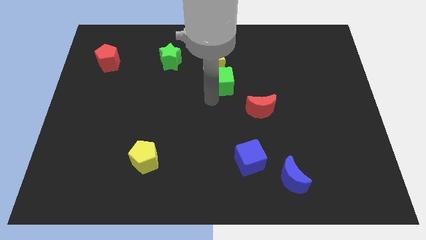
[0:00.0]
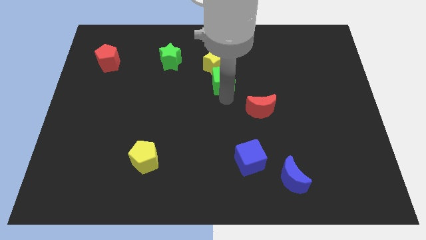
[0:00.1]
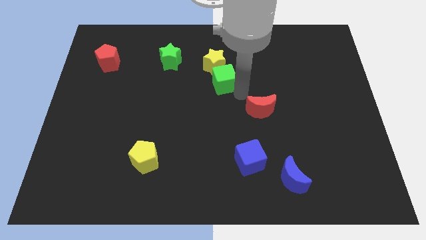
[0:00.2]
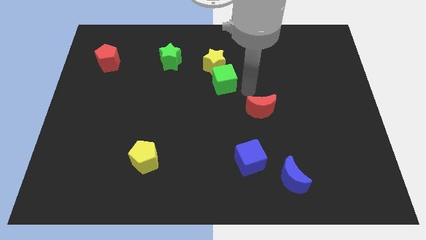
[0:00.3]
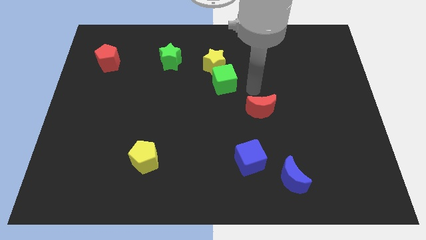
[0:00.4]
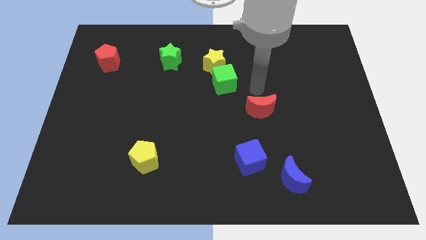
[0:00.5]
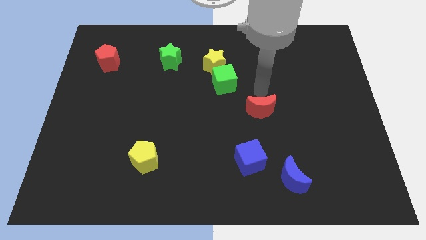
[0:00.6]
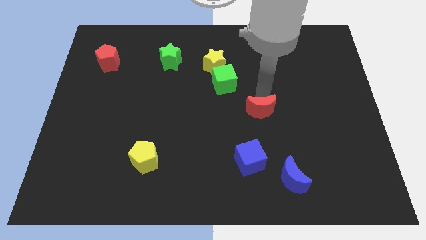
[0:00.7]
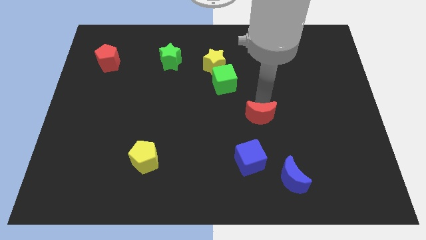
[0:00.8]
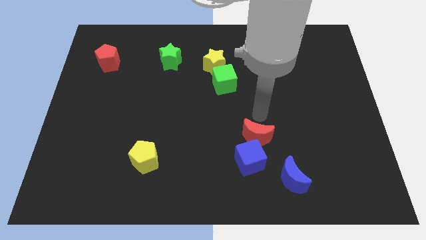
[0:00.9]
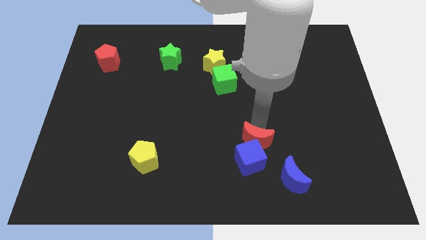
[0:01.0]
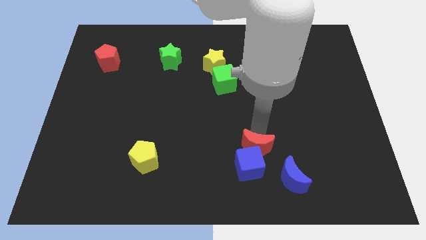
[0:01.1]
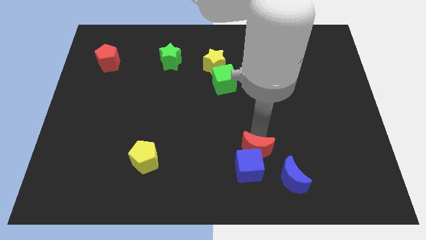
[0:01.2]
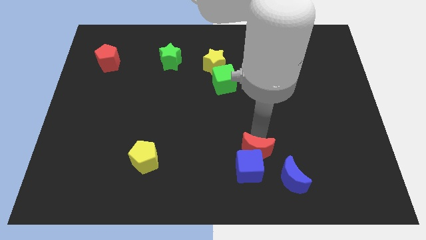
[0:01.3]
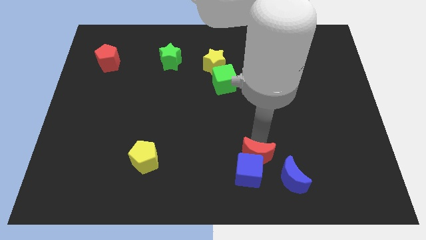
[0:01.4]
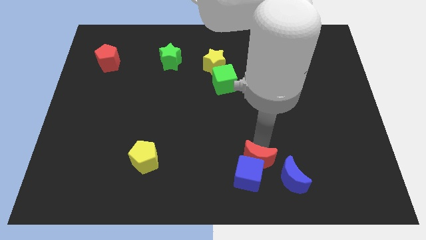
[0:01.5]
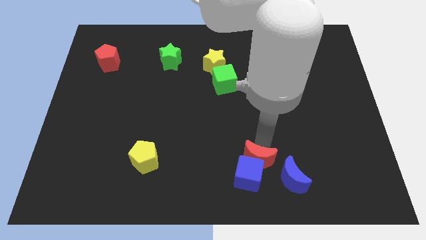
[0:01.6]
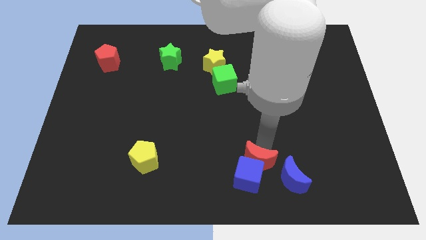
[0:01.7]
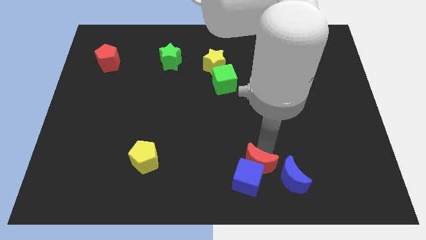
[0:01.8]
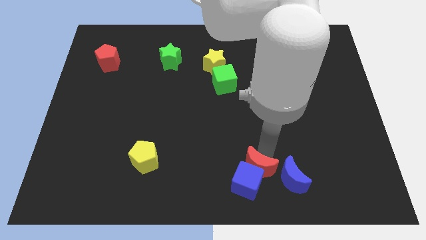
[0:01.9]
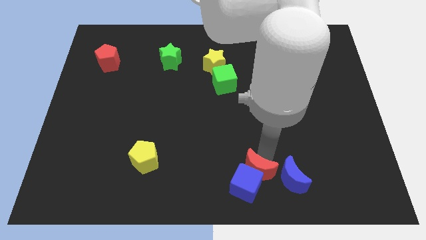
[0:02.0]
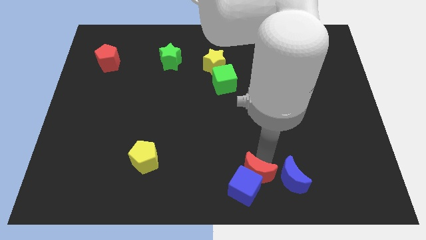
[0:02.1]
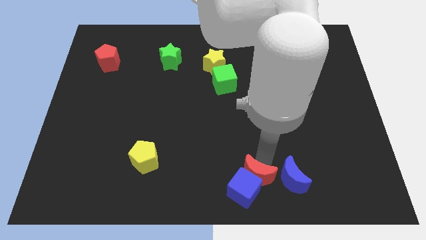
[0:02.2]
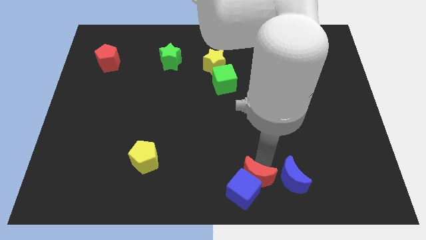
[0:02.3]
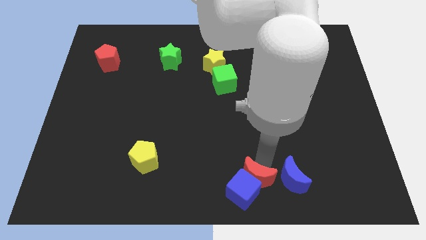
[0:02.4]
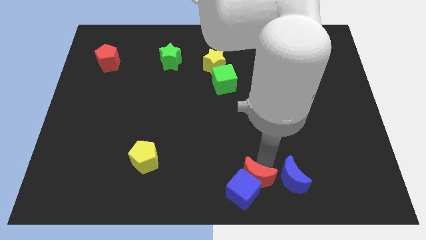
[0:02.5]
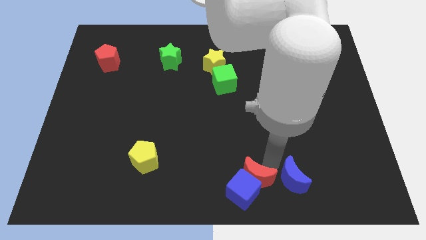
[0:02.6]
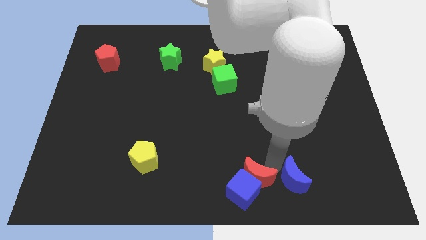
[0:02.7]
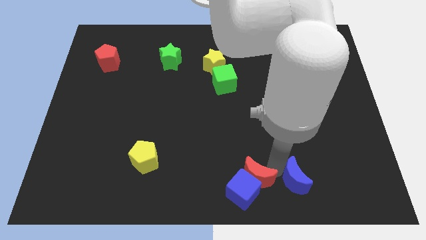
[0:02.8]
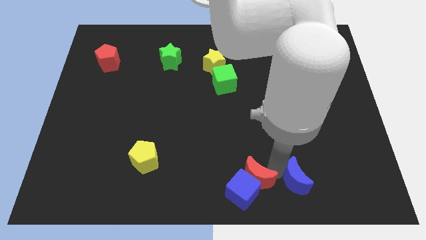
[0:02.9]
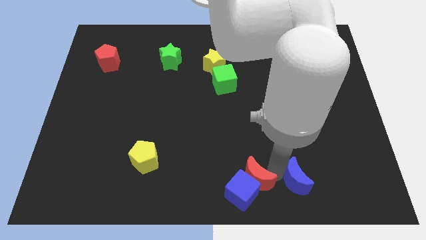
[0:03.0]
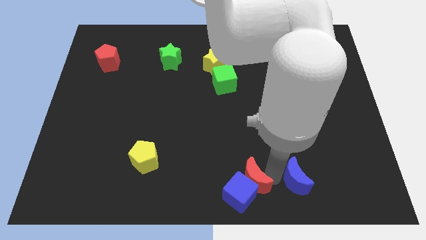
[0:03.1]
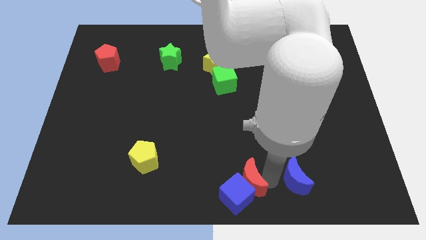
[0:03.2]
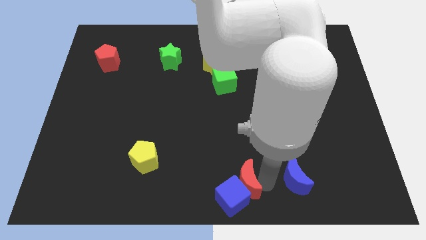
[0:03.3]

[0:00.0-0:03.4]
push red moon in to blue cube

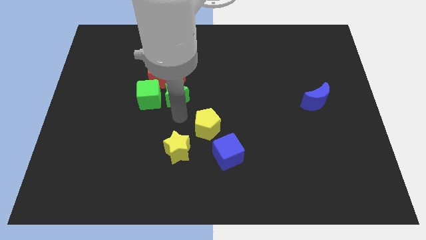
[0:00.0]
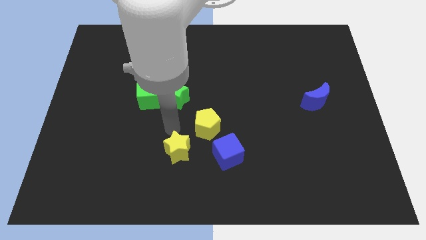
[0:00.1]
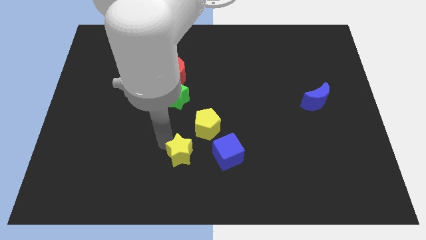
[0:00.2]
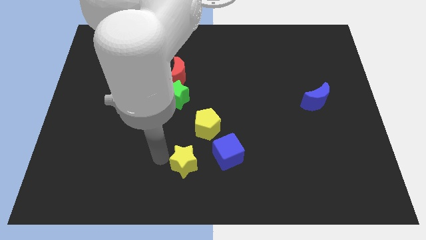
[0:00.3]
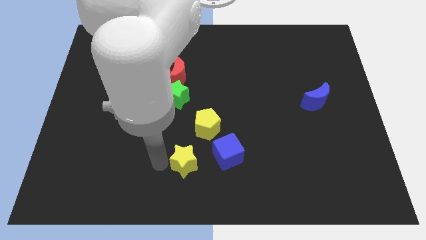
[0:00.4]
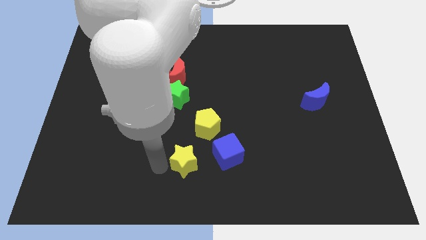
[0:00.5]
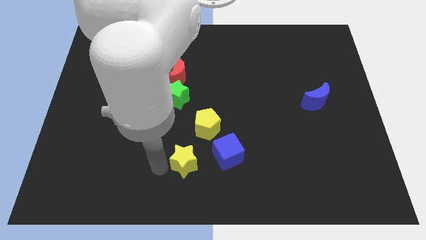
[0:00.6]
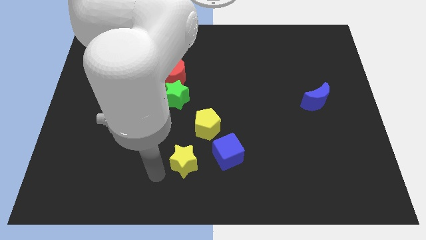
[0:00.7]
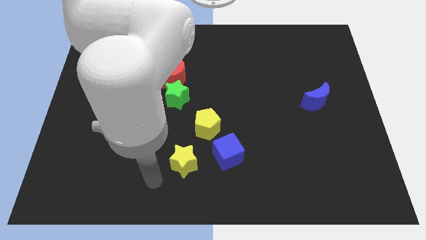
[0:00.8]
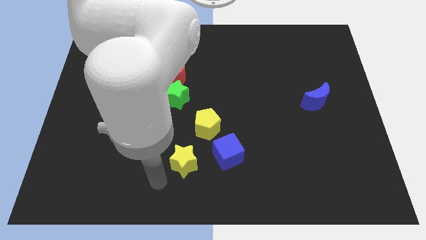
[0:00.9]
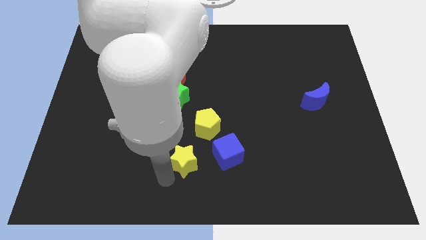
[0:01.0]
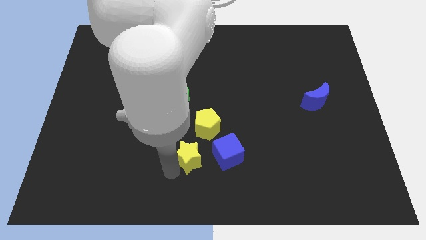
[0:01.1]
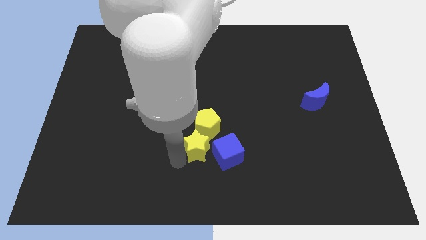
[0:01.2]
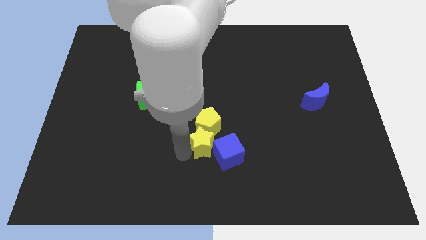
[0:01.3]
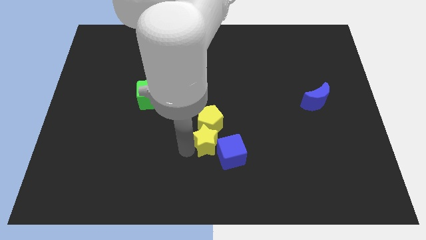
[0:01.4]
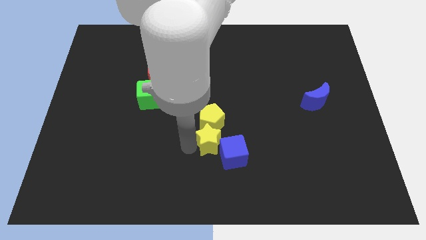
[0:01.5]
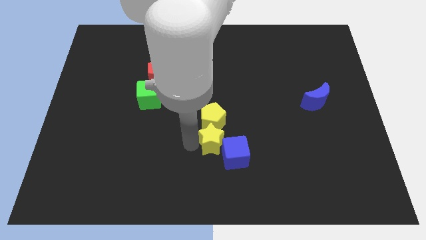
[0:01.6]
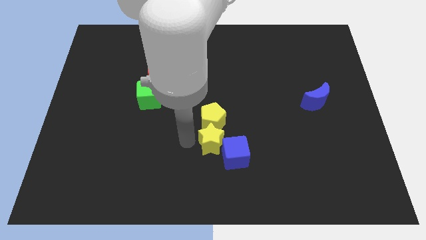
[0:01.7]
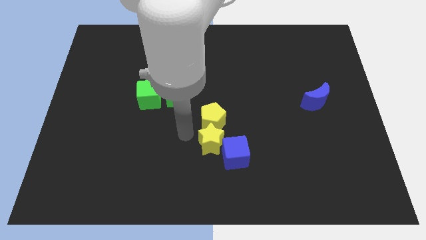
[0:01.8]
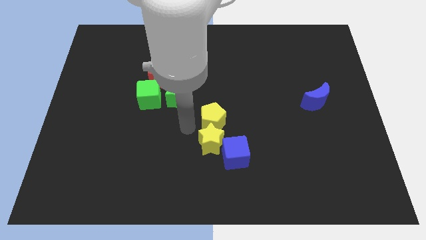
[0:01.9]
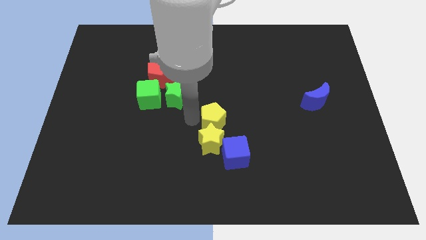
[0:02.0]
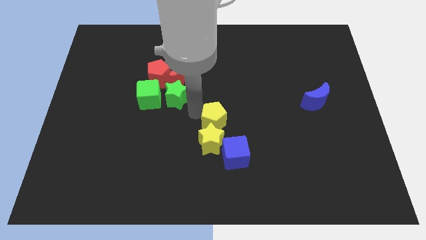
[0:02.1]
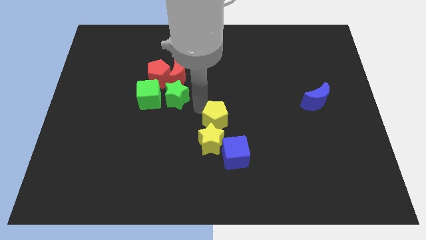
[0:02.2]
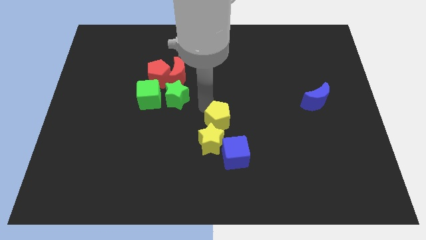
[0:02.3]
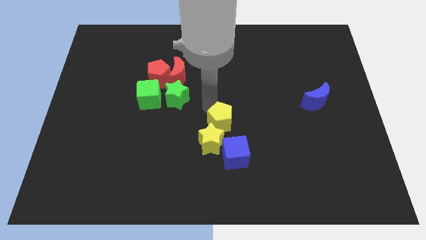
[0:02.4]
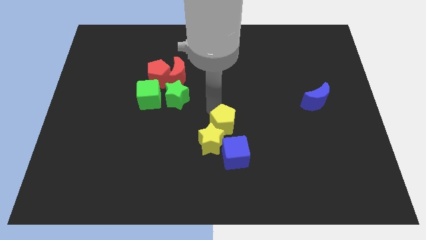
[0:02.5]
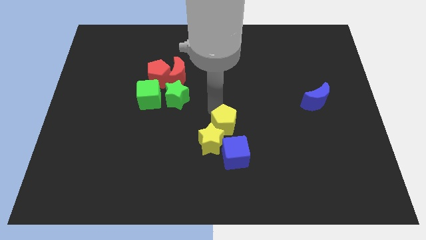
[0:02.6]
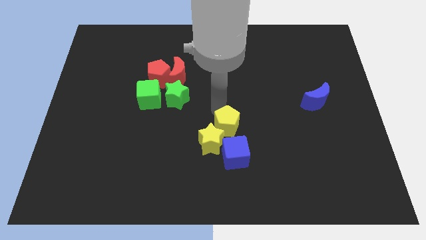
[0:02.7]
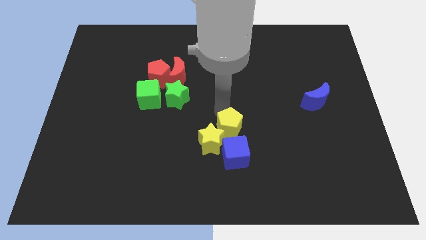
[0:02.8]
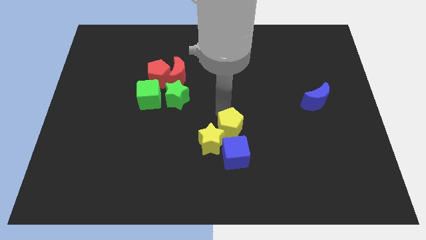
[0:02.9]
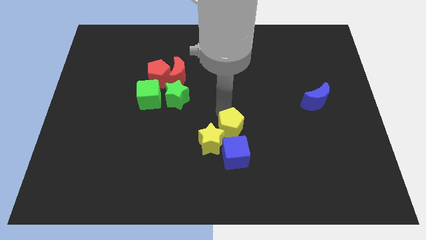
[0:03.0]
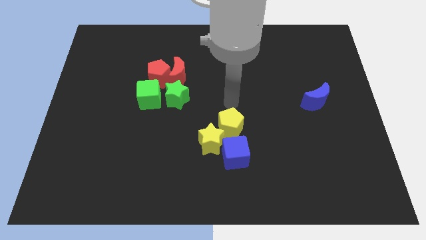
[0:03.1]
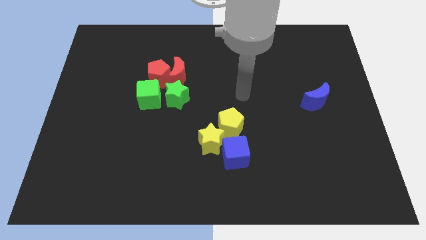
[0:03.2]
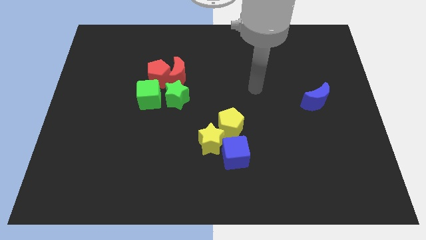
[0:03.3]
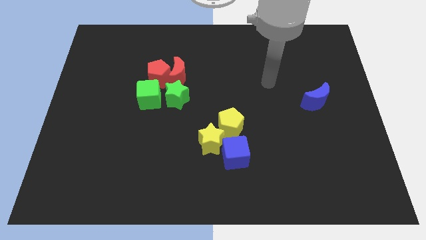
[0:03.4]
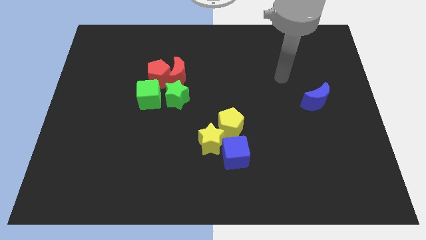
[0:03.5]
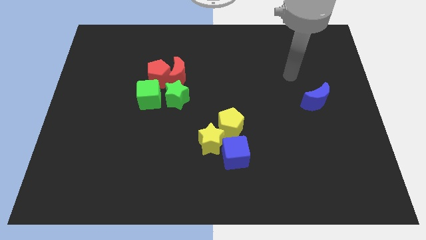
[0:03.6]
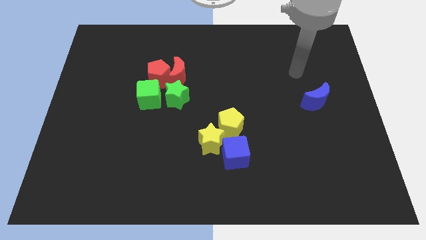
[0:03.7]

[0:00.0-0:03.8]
move yellow blocks towards the blue cube

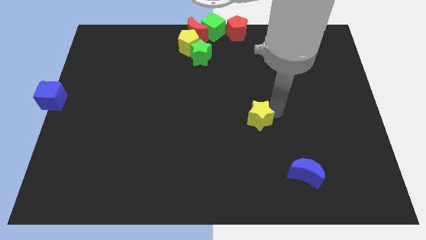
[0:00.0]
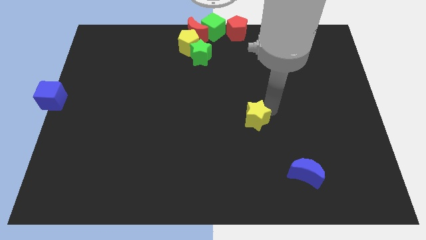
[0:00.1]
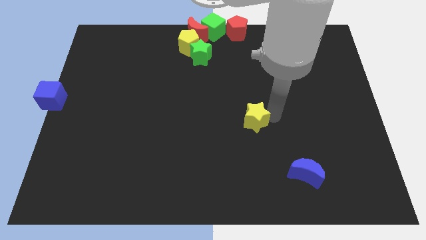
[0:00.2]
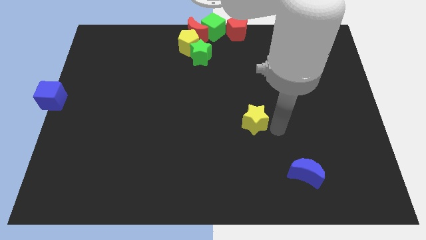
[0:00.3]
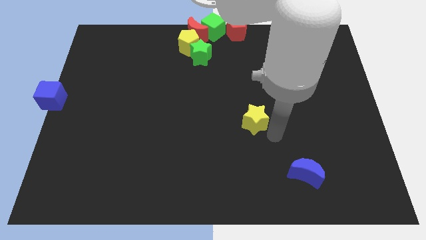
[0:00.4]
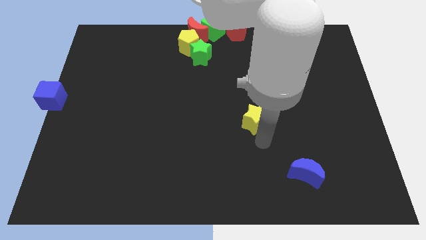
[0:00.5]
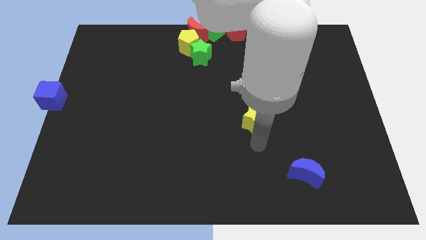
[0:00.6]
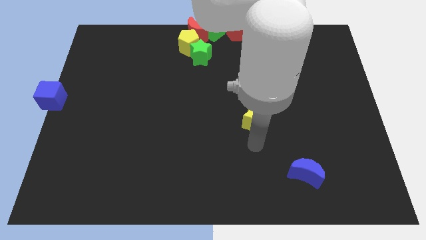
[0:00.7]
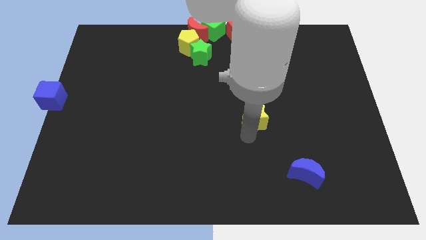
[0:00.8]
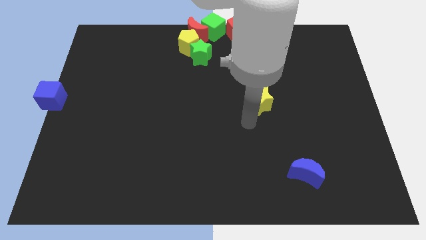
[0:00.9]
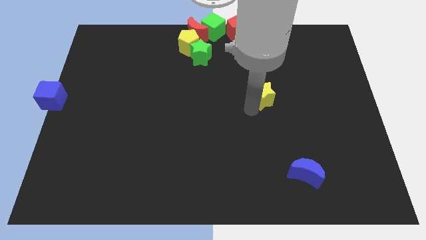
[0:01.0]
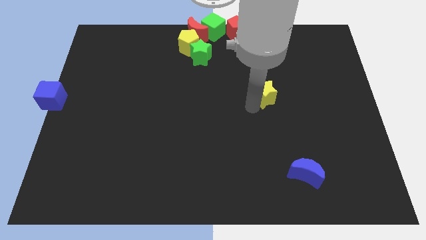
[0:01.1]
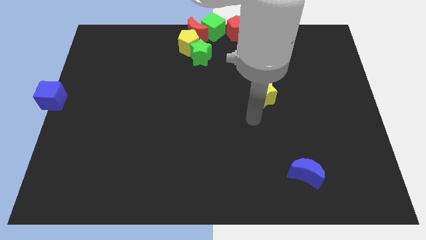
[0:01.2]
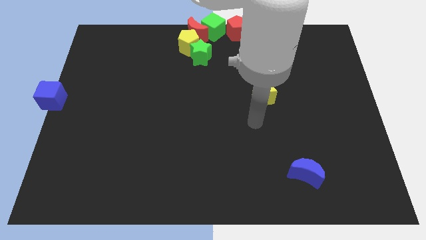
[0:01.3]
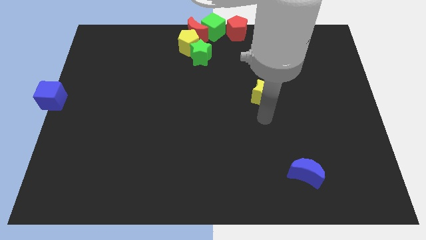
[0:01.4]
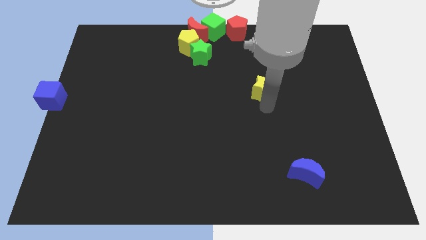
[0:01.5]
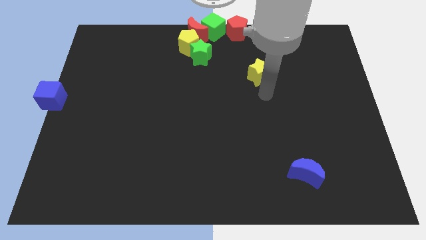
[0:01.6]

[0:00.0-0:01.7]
move the yellow star up wards

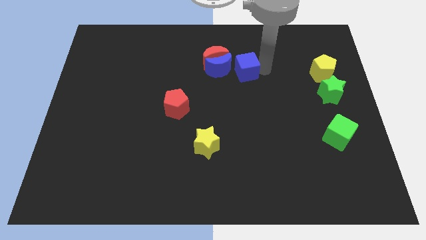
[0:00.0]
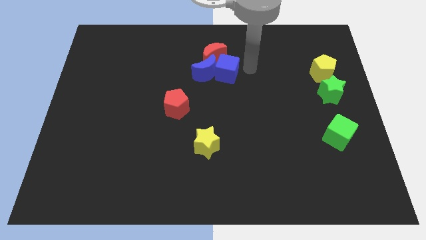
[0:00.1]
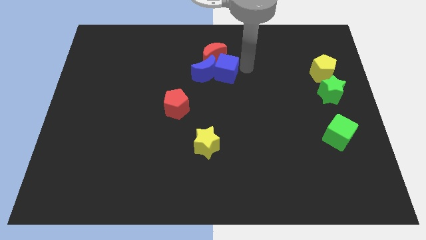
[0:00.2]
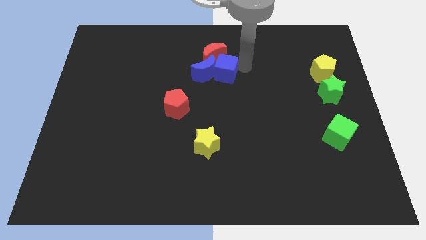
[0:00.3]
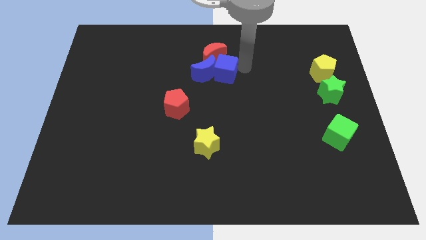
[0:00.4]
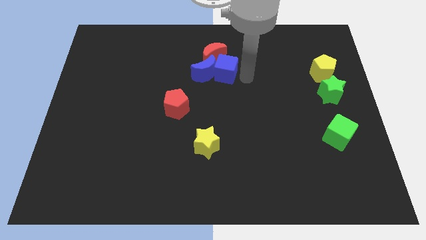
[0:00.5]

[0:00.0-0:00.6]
push the blue cube into the red and blue crescent
